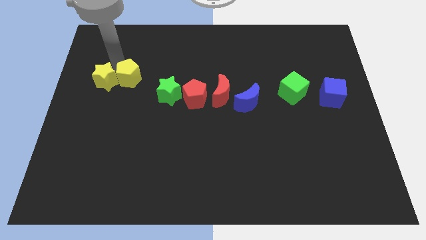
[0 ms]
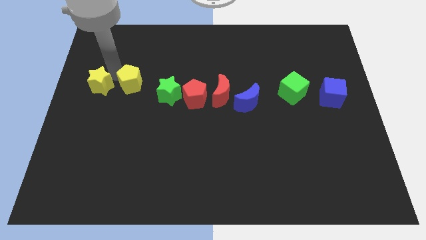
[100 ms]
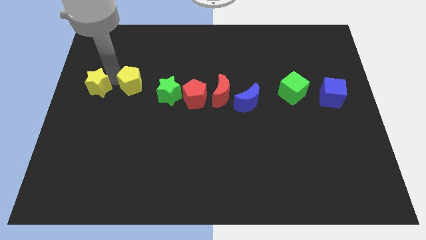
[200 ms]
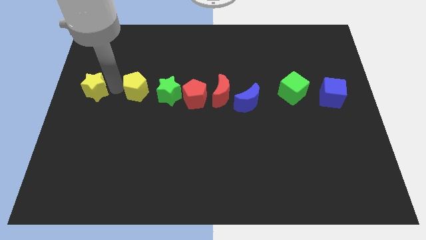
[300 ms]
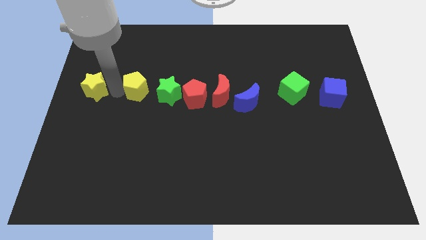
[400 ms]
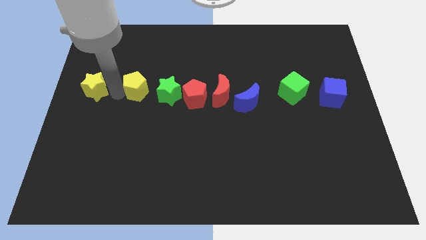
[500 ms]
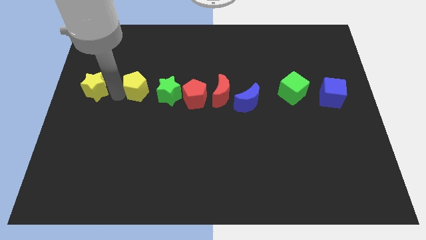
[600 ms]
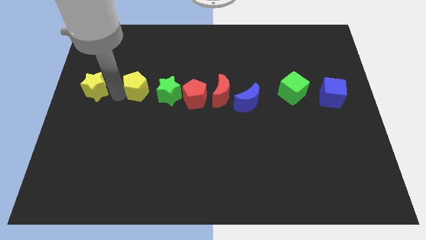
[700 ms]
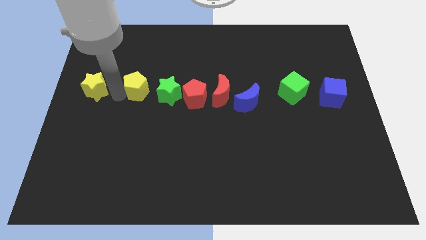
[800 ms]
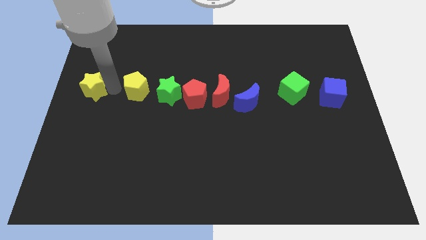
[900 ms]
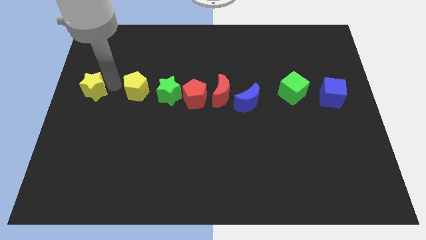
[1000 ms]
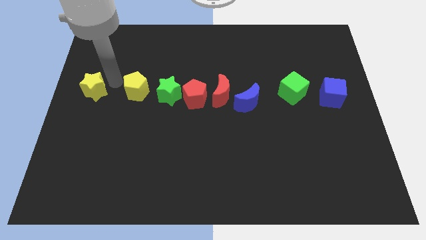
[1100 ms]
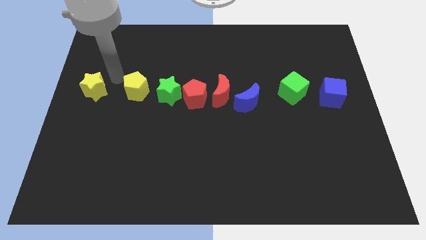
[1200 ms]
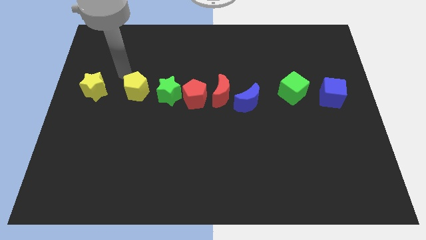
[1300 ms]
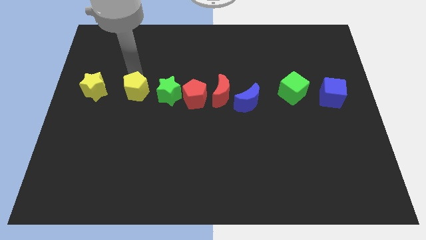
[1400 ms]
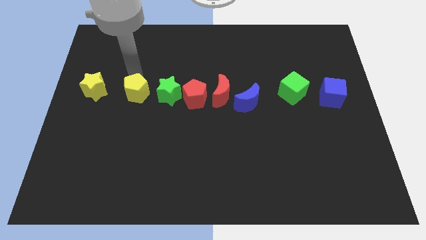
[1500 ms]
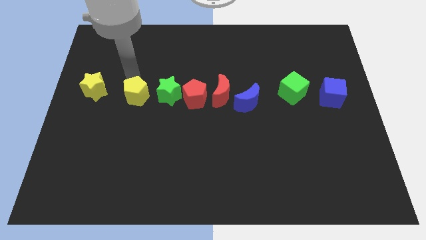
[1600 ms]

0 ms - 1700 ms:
separate the yellow pentagon from the yellow star

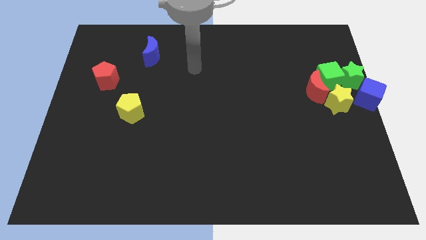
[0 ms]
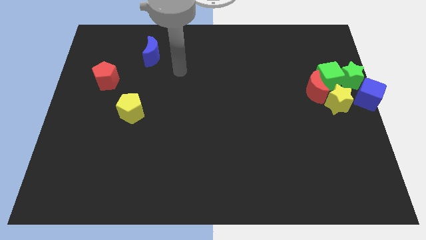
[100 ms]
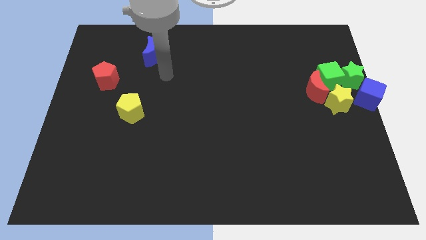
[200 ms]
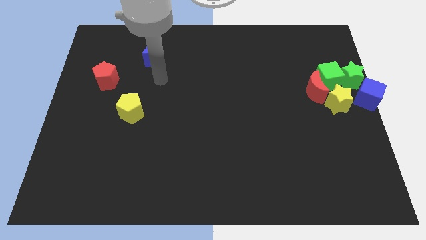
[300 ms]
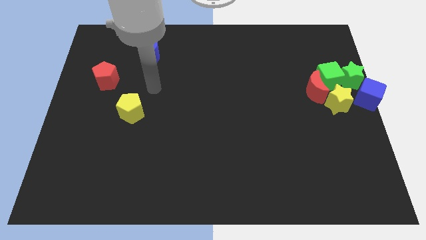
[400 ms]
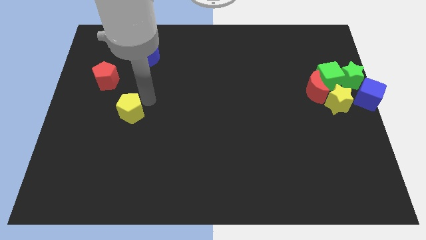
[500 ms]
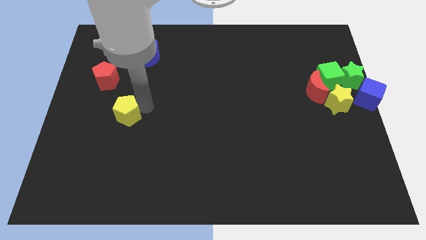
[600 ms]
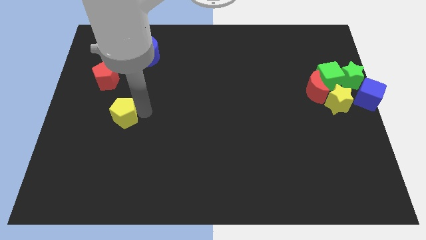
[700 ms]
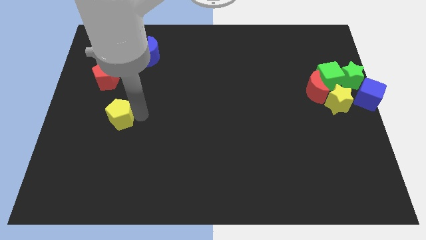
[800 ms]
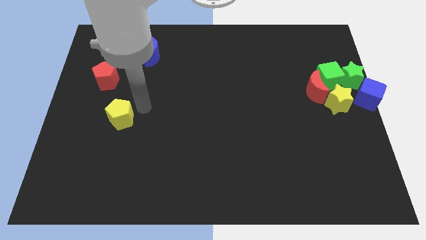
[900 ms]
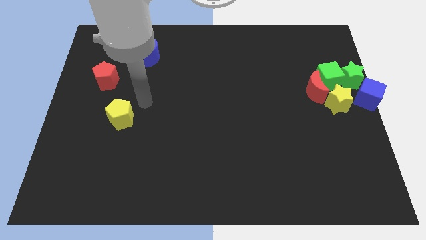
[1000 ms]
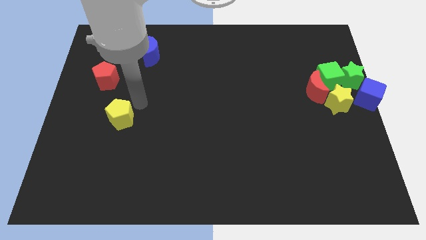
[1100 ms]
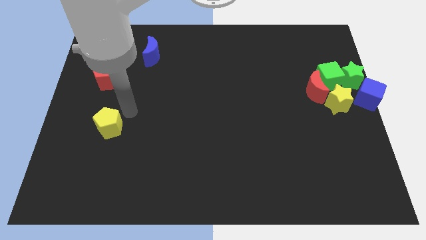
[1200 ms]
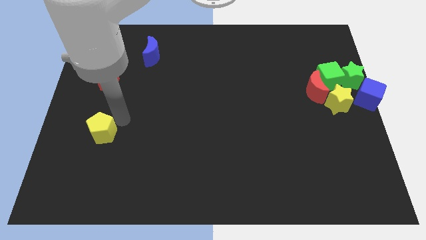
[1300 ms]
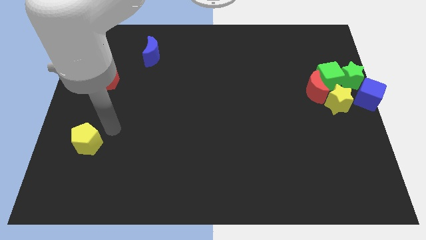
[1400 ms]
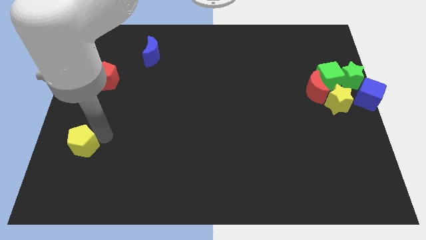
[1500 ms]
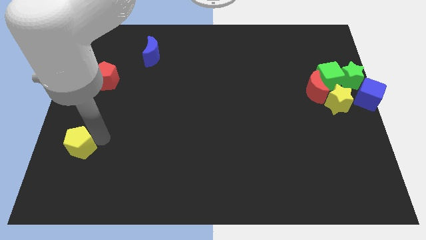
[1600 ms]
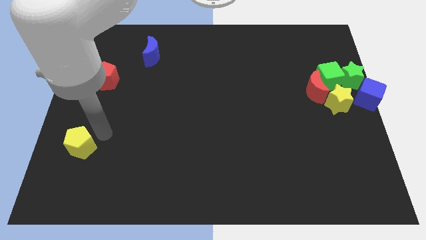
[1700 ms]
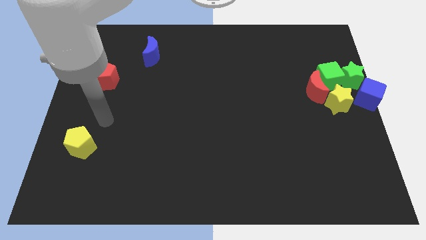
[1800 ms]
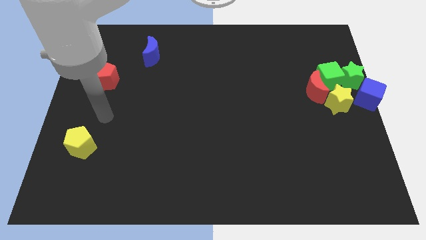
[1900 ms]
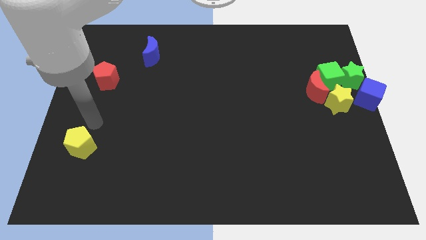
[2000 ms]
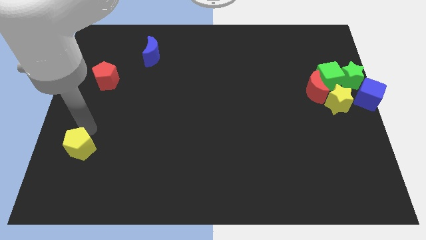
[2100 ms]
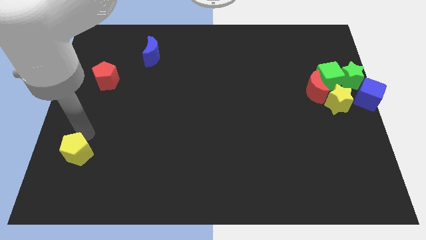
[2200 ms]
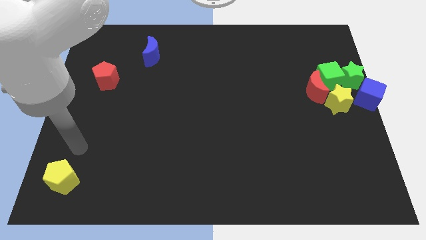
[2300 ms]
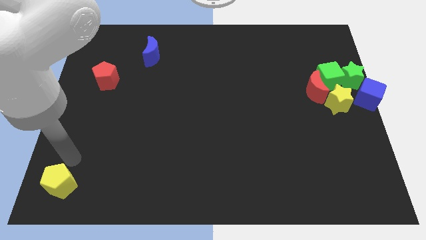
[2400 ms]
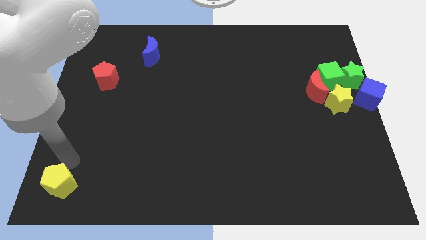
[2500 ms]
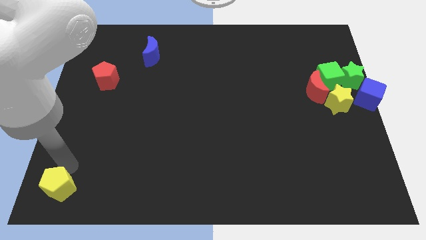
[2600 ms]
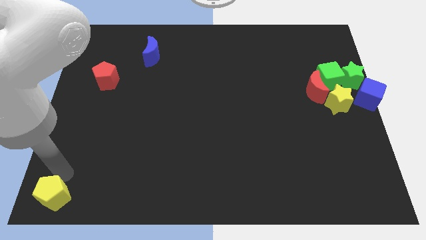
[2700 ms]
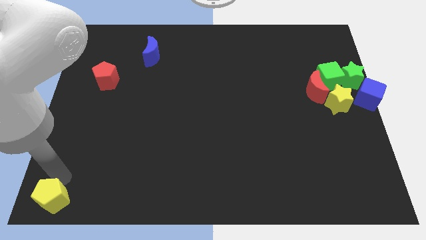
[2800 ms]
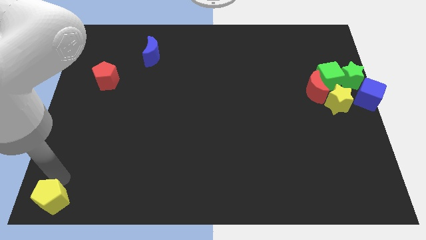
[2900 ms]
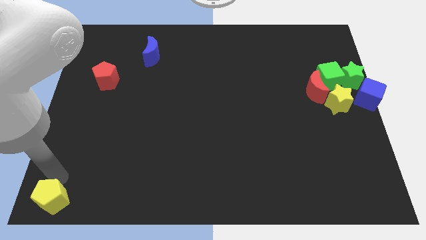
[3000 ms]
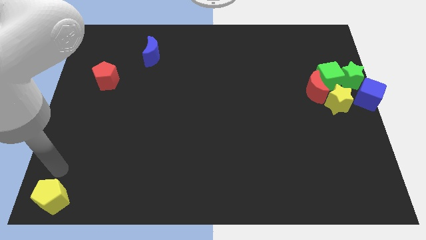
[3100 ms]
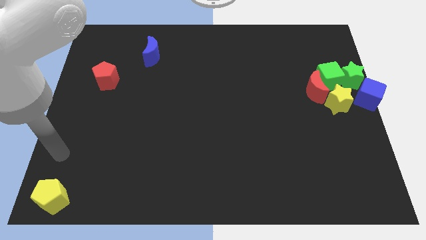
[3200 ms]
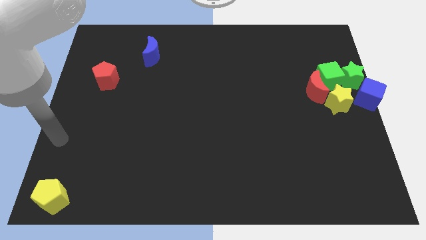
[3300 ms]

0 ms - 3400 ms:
move the yellow pentagon to the bottom left of the board

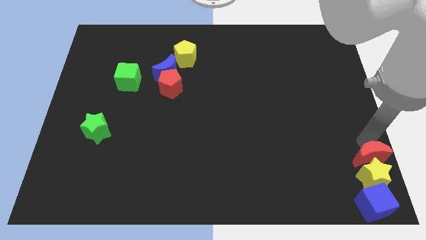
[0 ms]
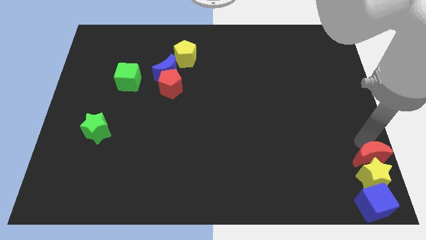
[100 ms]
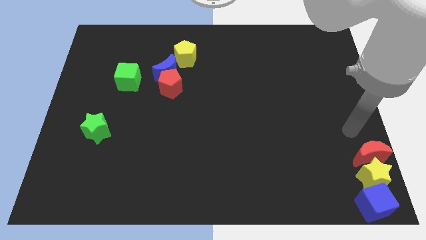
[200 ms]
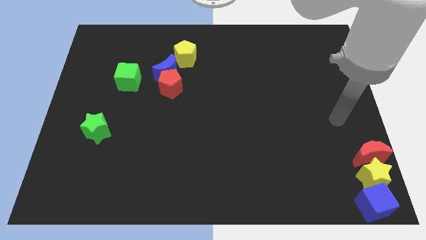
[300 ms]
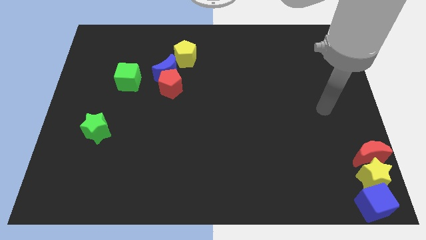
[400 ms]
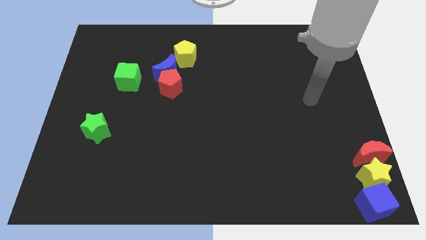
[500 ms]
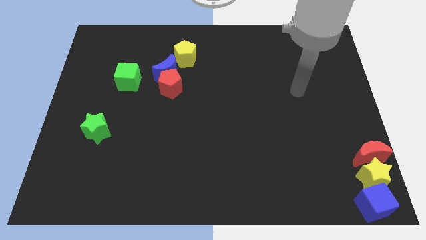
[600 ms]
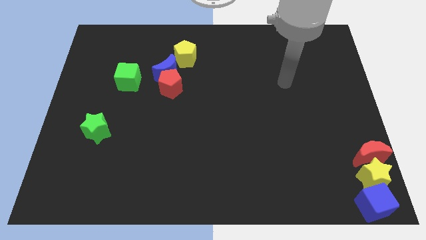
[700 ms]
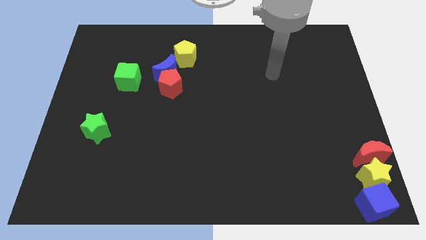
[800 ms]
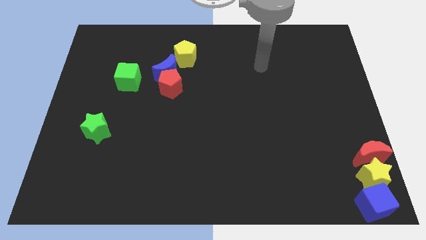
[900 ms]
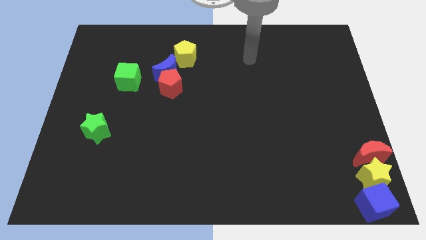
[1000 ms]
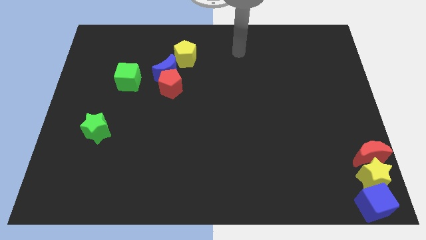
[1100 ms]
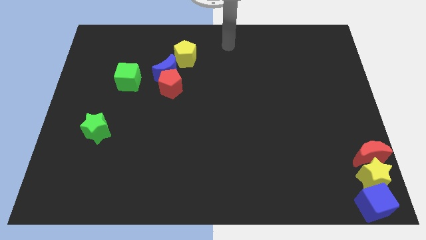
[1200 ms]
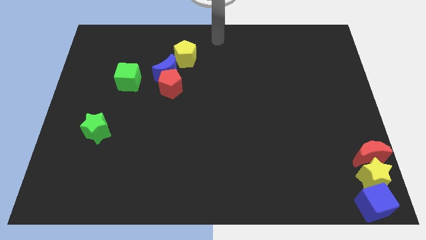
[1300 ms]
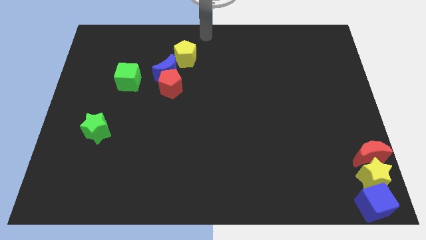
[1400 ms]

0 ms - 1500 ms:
move your hand to the top center of the board

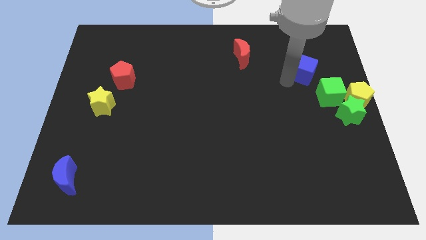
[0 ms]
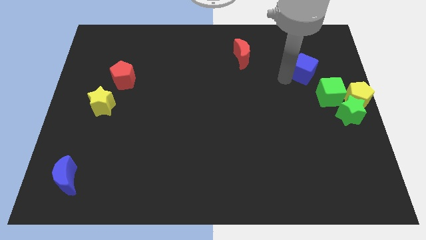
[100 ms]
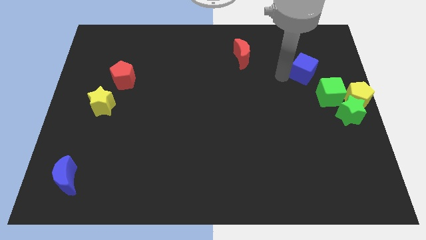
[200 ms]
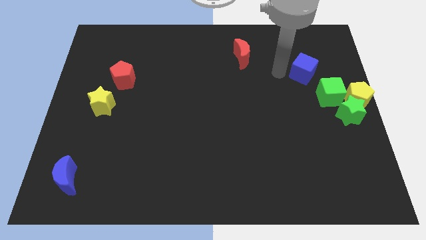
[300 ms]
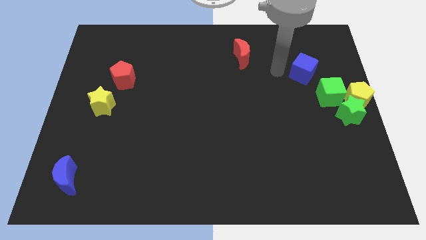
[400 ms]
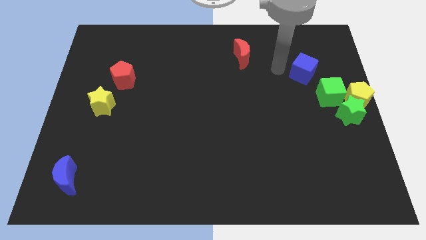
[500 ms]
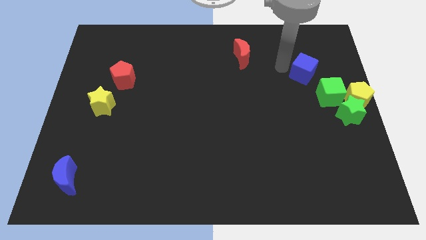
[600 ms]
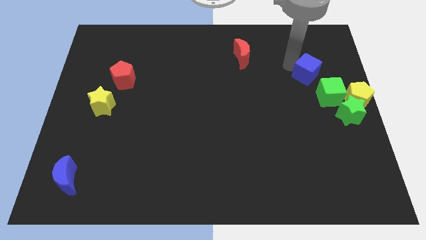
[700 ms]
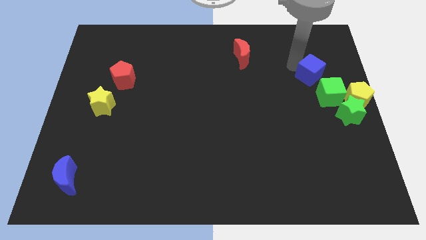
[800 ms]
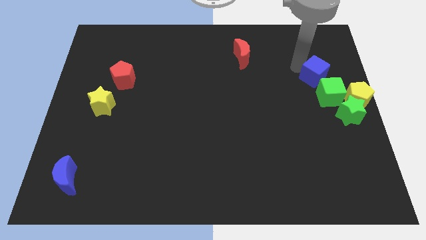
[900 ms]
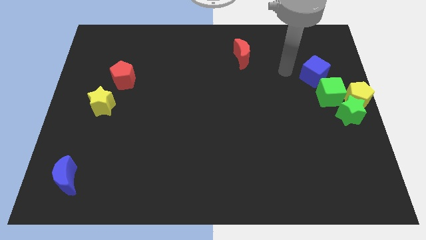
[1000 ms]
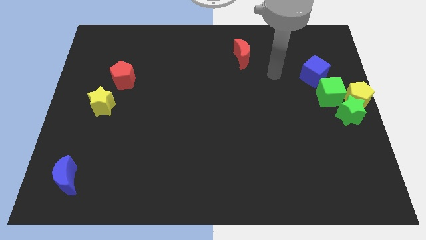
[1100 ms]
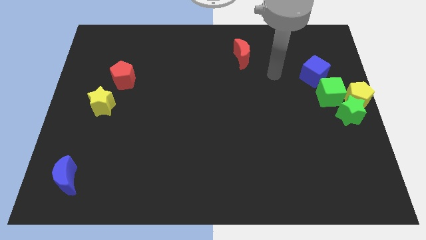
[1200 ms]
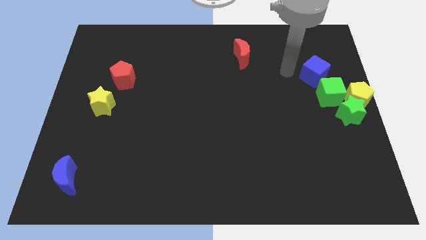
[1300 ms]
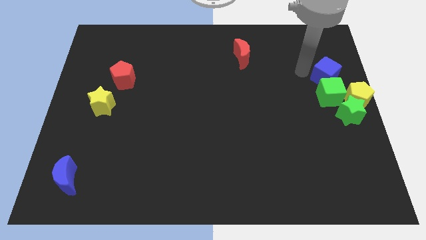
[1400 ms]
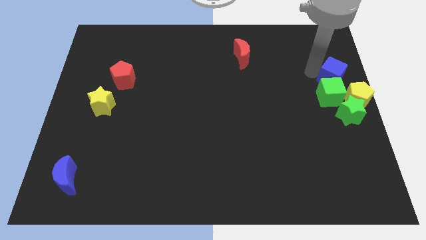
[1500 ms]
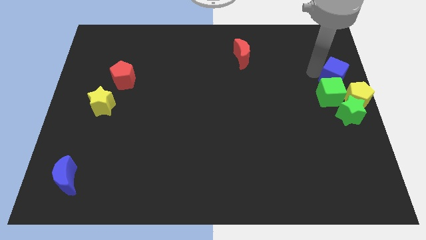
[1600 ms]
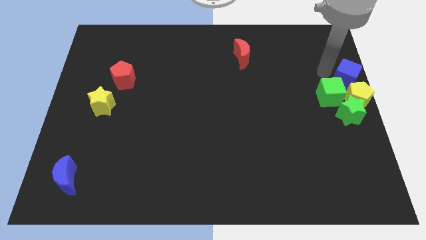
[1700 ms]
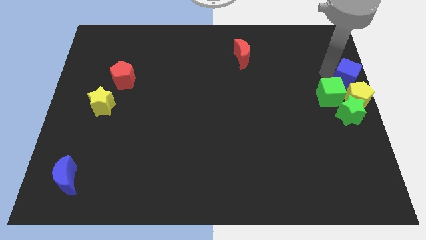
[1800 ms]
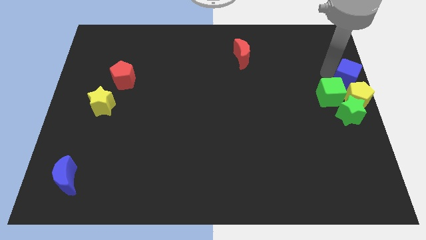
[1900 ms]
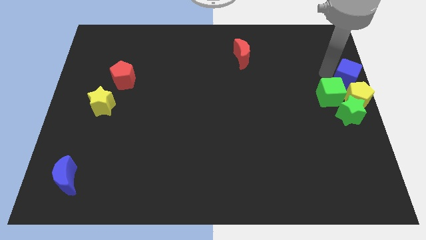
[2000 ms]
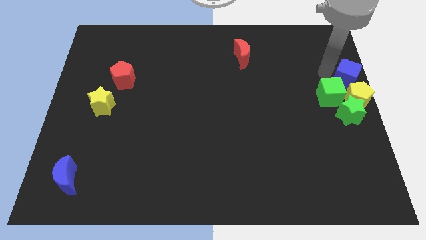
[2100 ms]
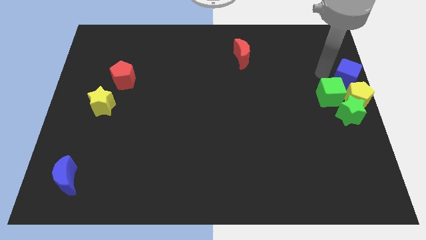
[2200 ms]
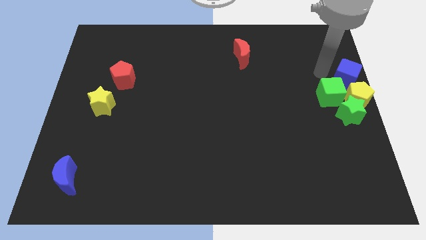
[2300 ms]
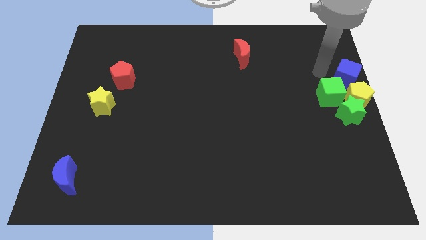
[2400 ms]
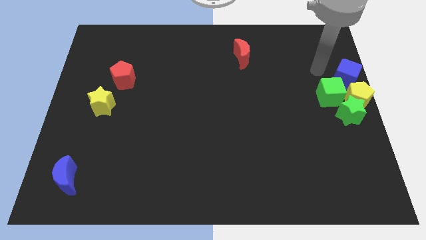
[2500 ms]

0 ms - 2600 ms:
push the blue cube towards the yellow pentagon
